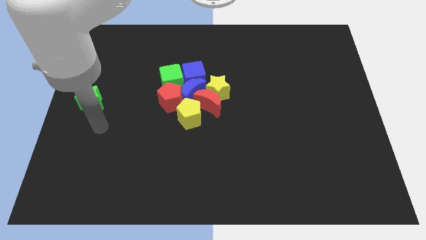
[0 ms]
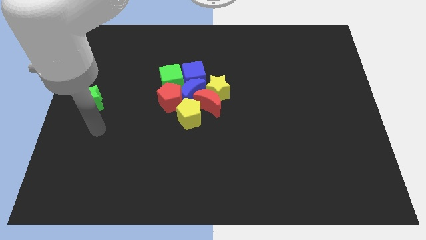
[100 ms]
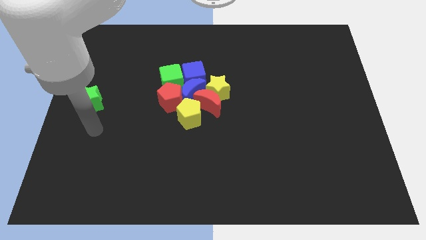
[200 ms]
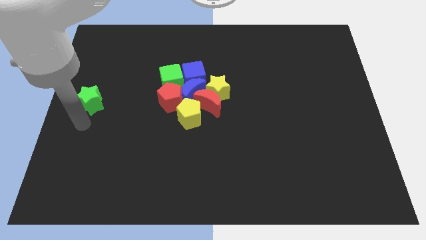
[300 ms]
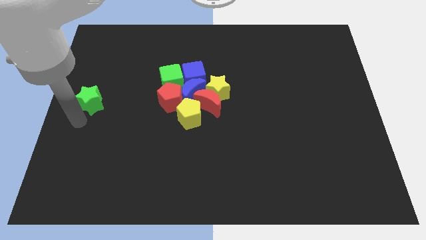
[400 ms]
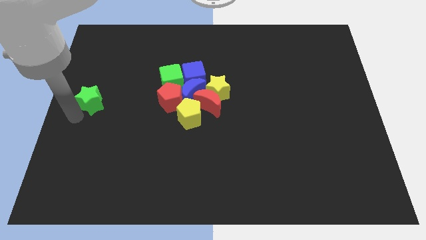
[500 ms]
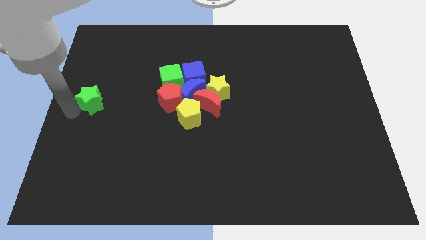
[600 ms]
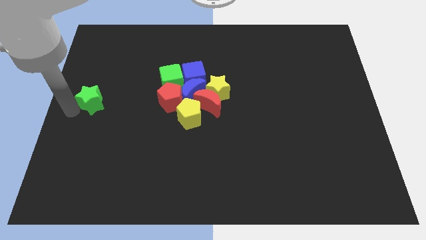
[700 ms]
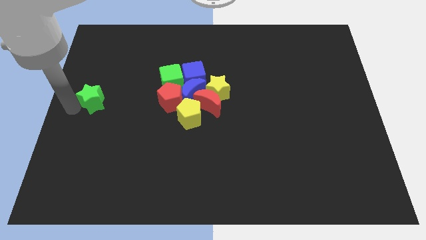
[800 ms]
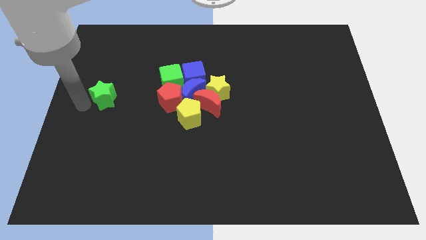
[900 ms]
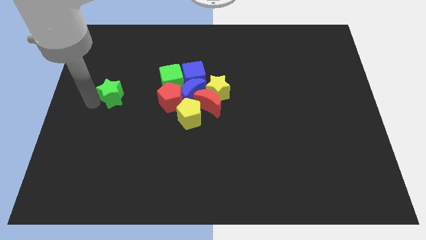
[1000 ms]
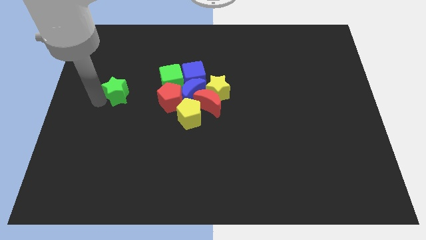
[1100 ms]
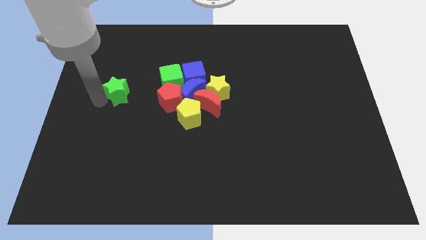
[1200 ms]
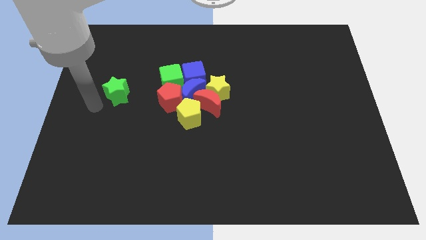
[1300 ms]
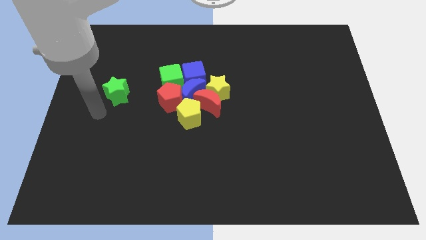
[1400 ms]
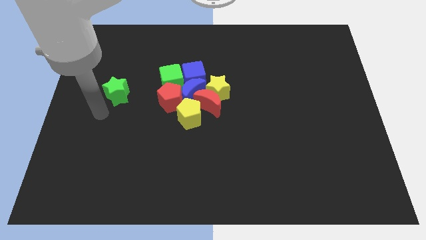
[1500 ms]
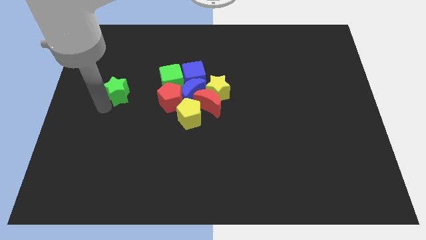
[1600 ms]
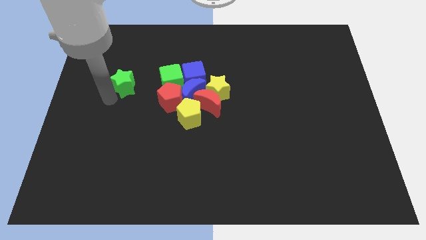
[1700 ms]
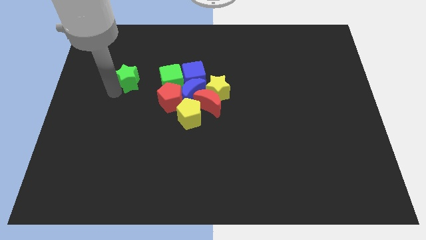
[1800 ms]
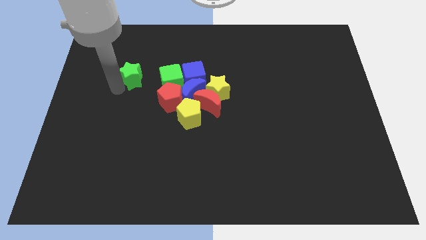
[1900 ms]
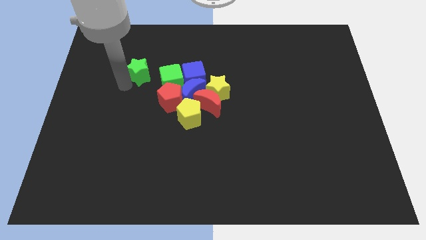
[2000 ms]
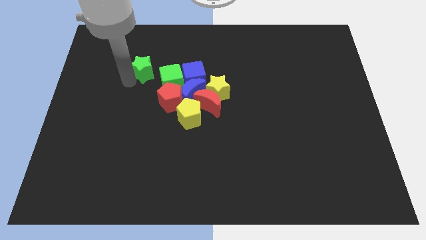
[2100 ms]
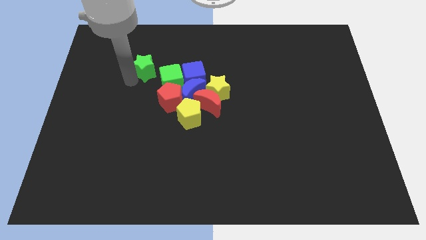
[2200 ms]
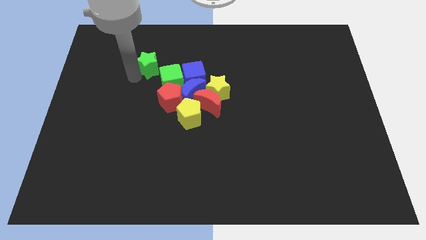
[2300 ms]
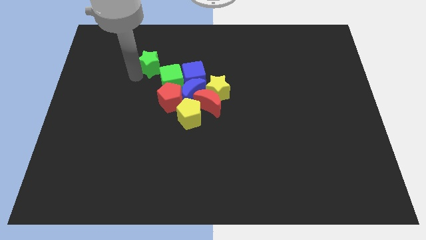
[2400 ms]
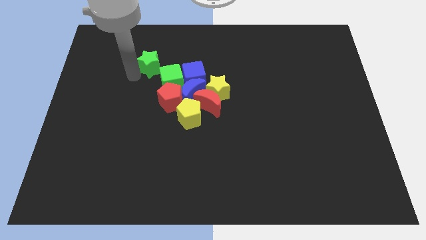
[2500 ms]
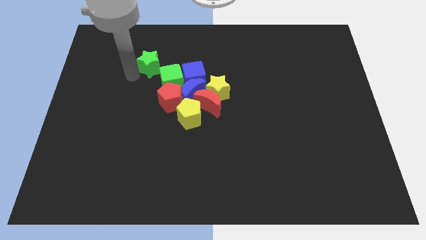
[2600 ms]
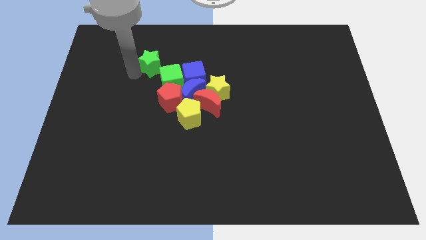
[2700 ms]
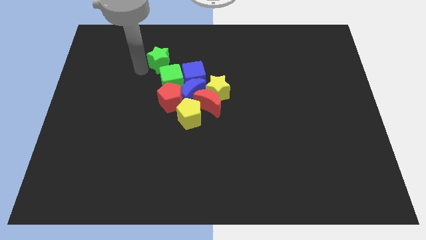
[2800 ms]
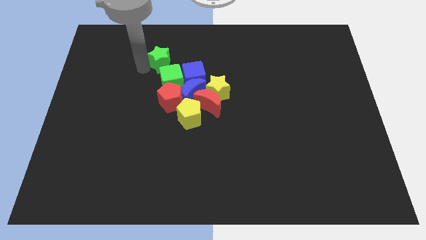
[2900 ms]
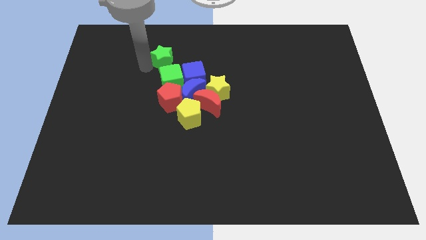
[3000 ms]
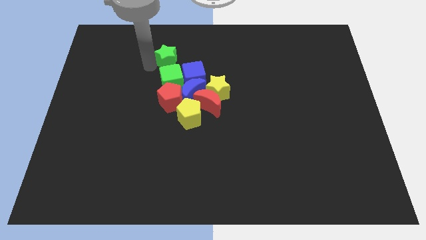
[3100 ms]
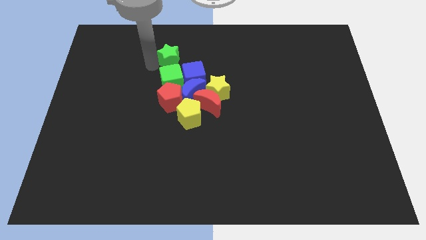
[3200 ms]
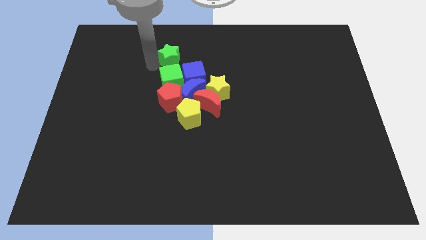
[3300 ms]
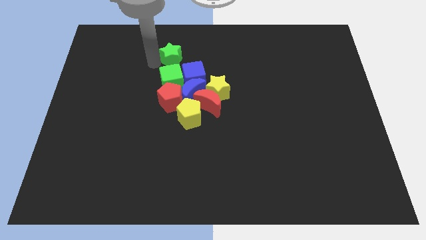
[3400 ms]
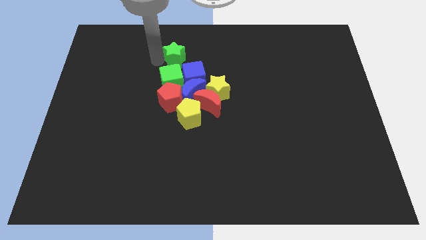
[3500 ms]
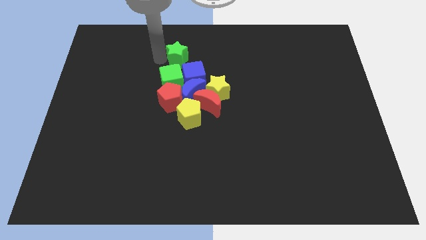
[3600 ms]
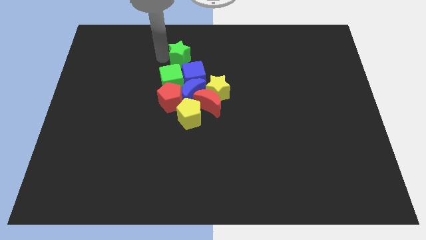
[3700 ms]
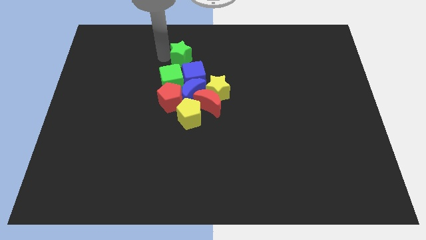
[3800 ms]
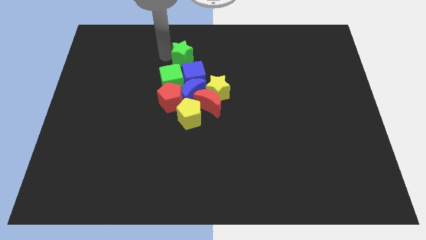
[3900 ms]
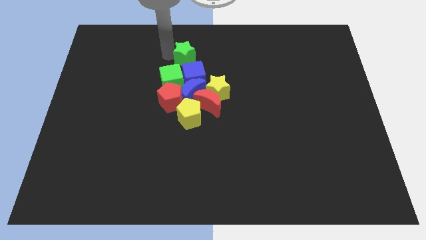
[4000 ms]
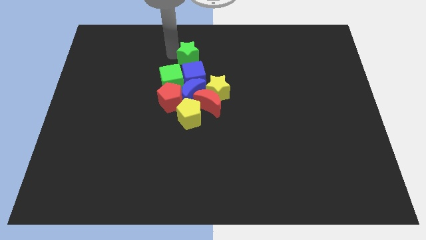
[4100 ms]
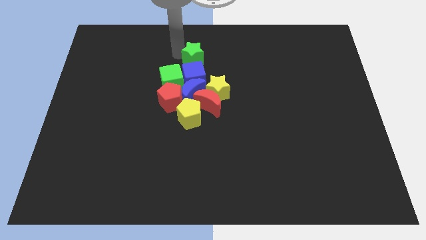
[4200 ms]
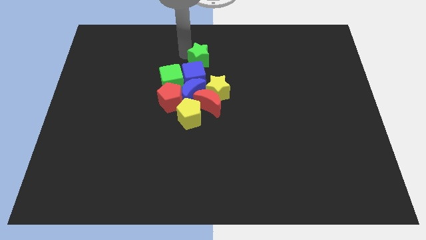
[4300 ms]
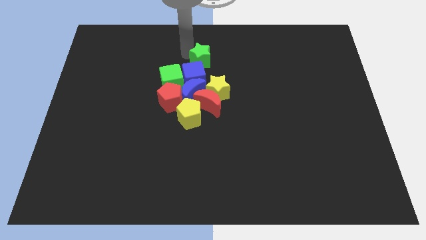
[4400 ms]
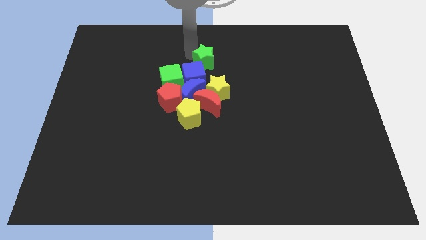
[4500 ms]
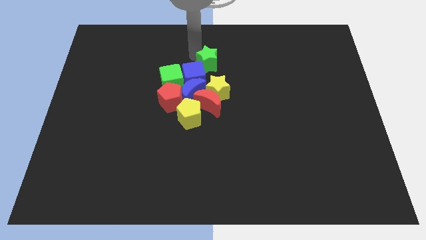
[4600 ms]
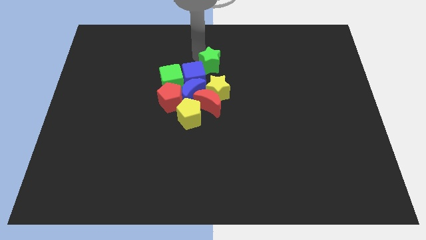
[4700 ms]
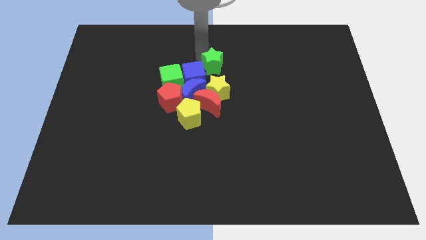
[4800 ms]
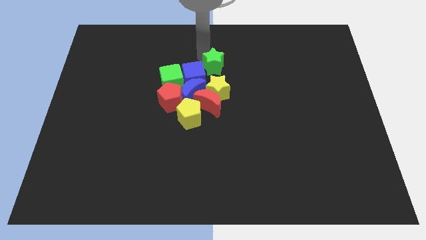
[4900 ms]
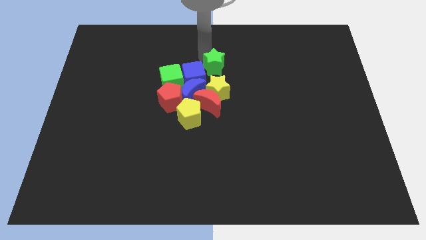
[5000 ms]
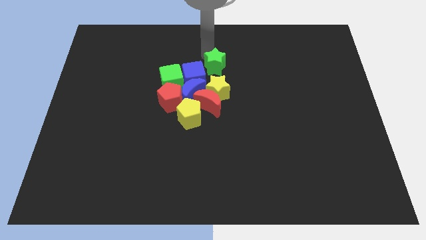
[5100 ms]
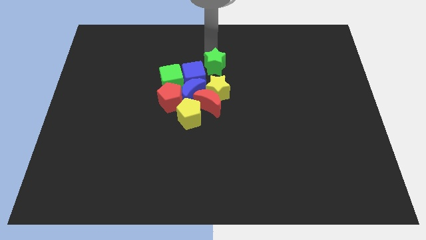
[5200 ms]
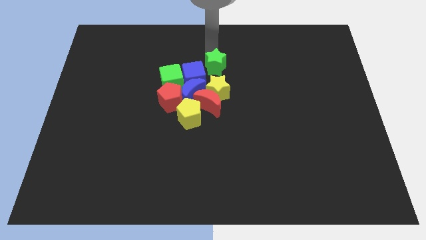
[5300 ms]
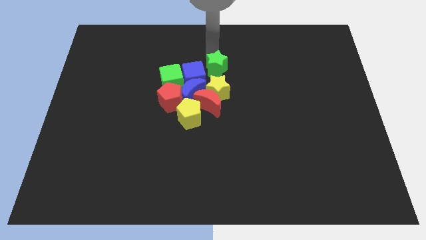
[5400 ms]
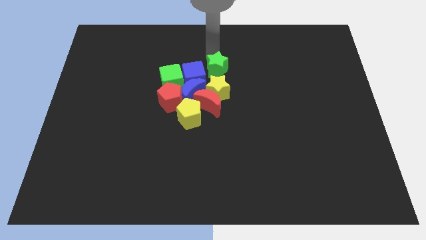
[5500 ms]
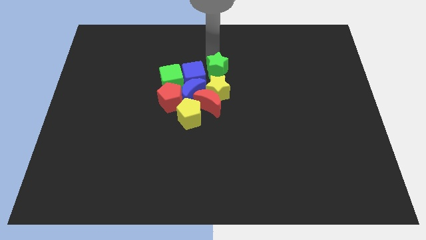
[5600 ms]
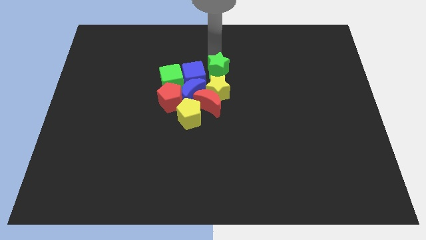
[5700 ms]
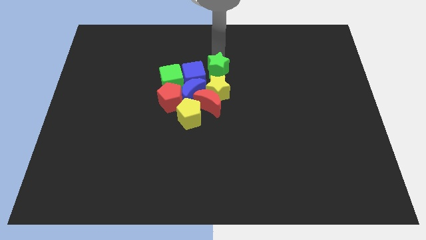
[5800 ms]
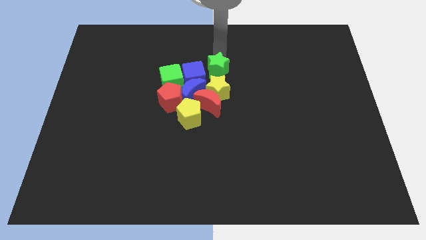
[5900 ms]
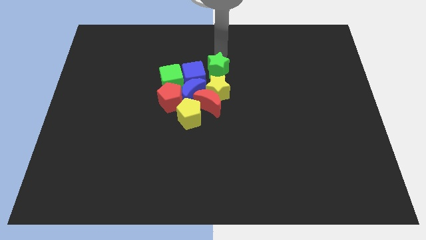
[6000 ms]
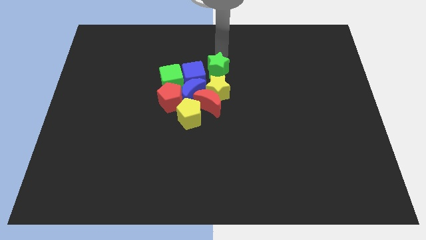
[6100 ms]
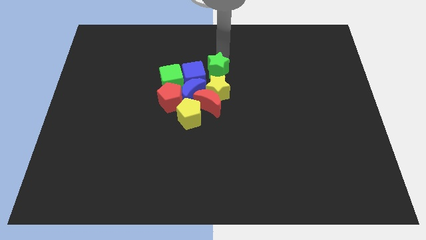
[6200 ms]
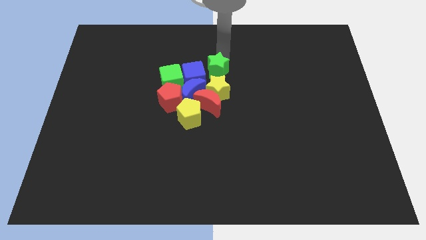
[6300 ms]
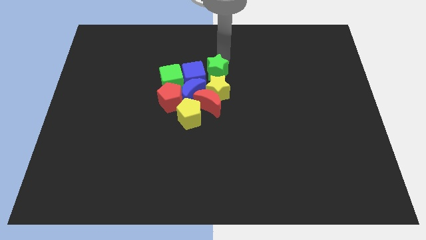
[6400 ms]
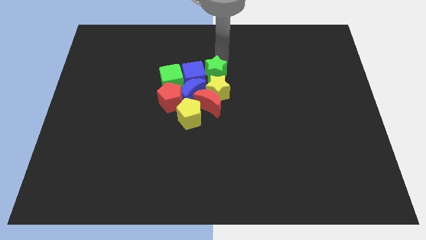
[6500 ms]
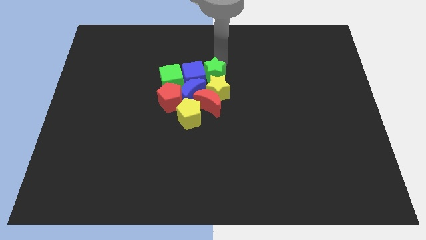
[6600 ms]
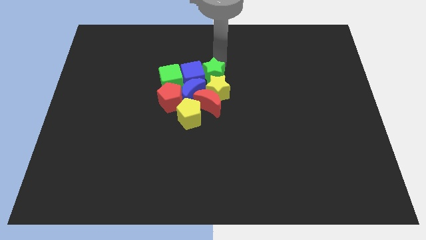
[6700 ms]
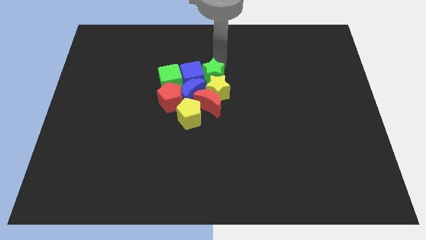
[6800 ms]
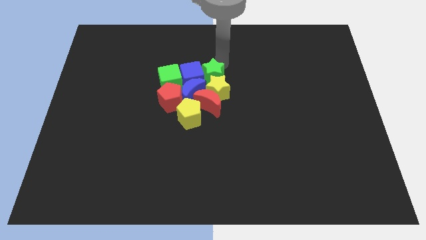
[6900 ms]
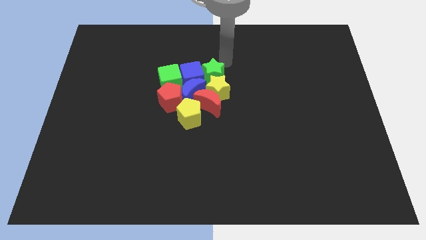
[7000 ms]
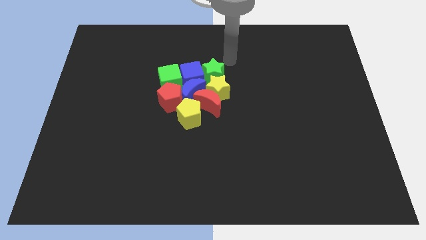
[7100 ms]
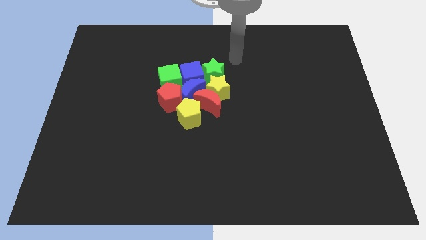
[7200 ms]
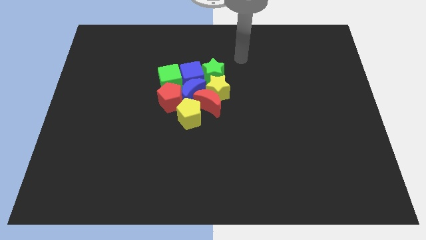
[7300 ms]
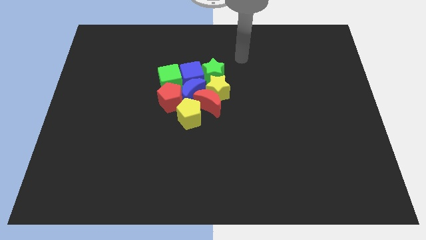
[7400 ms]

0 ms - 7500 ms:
move the green star towards the group of blocks

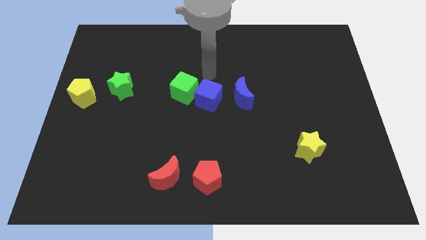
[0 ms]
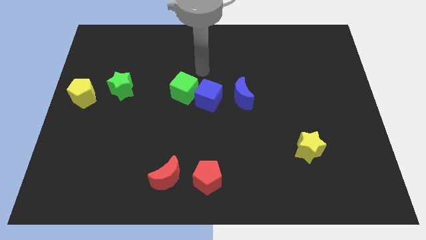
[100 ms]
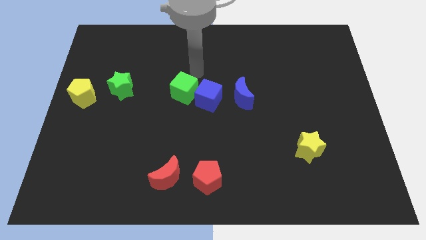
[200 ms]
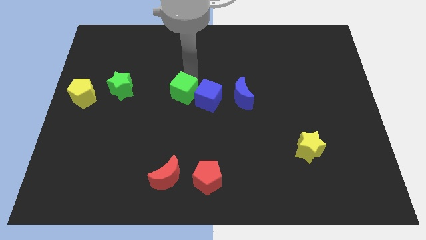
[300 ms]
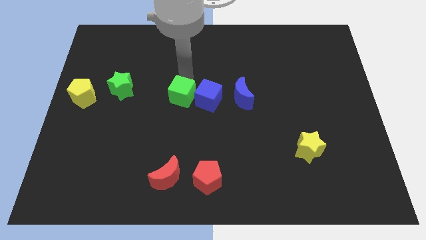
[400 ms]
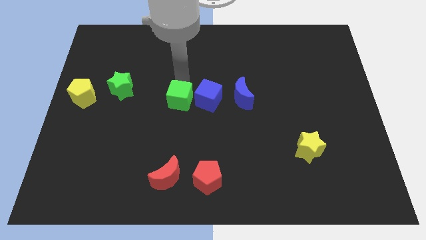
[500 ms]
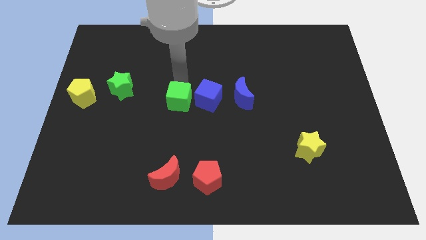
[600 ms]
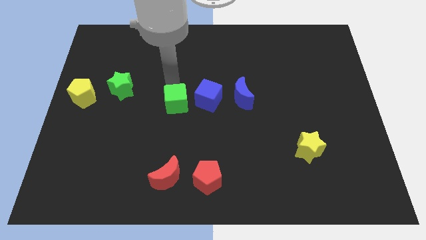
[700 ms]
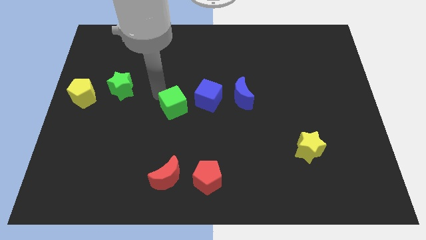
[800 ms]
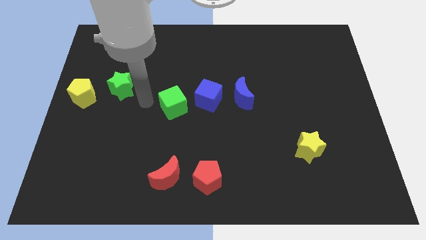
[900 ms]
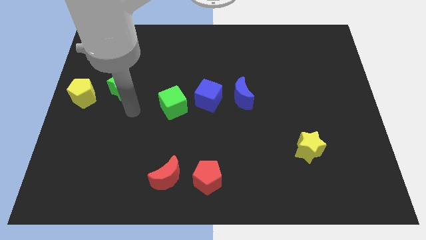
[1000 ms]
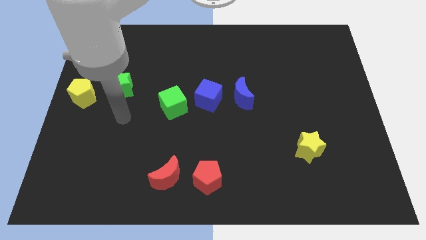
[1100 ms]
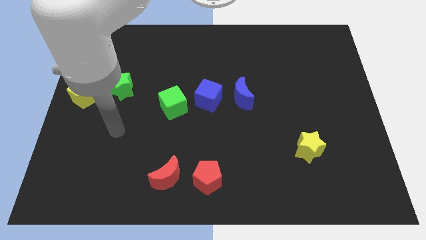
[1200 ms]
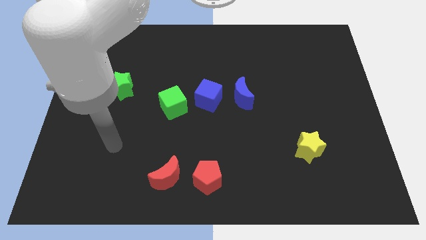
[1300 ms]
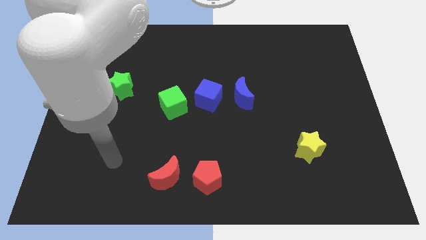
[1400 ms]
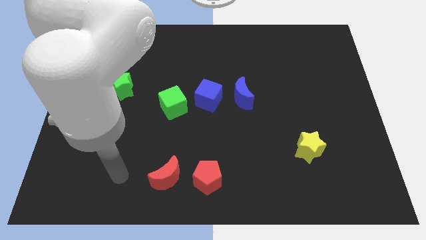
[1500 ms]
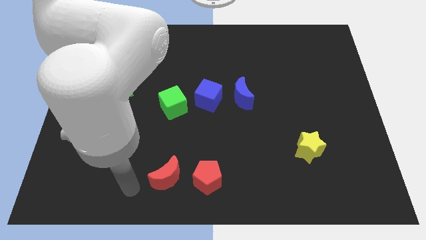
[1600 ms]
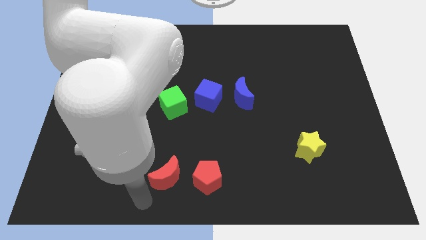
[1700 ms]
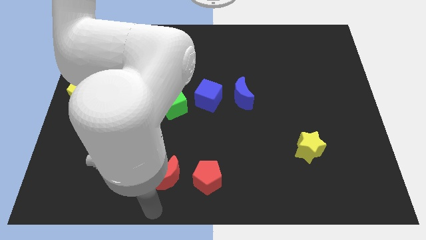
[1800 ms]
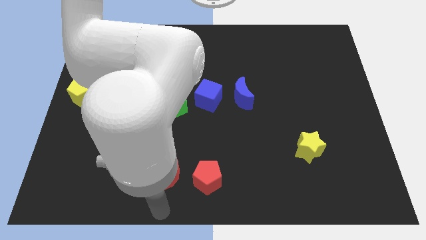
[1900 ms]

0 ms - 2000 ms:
slide the green cube slightly to the bottom
